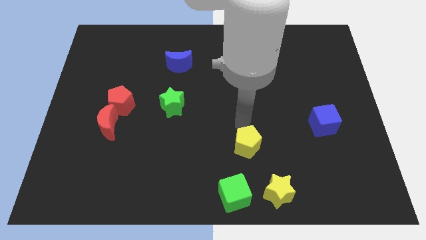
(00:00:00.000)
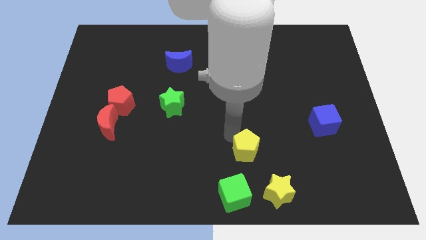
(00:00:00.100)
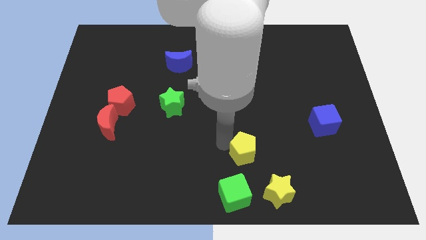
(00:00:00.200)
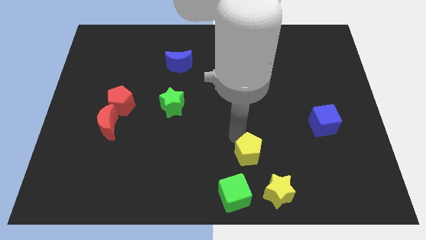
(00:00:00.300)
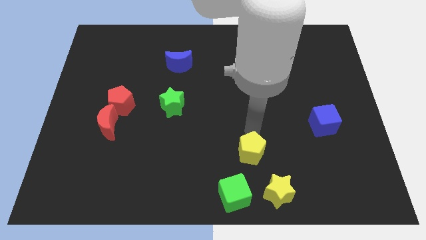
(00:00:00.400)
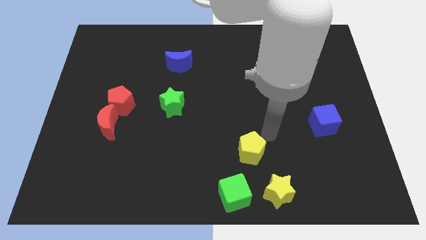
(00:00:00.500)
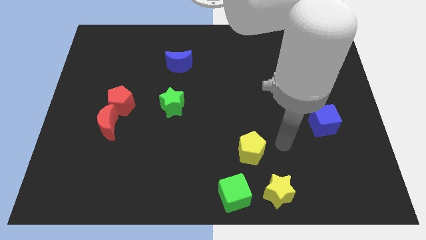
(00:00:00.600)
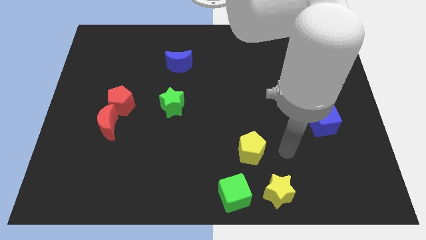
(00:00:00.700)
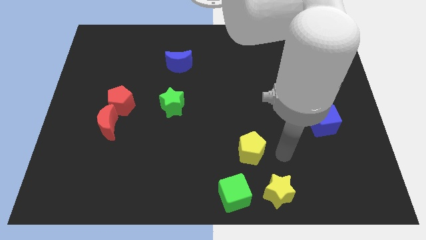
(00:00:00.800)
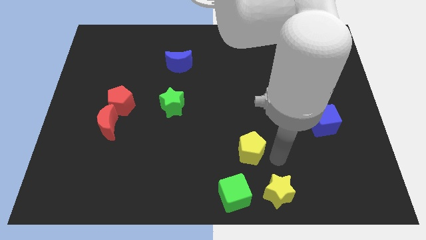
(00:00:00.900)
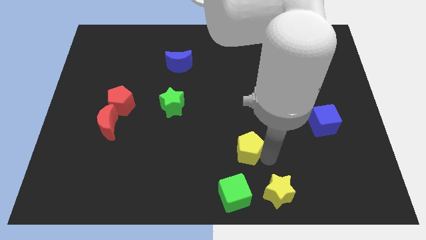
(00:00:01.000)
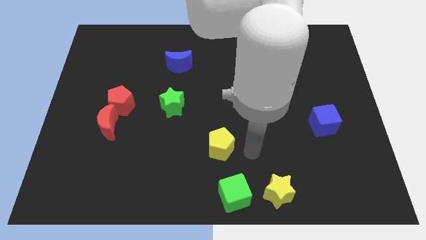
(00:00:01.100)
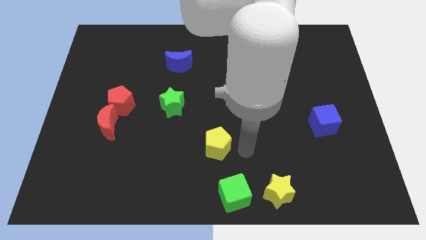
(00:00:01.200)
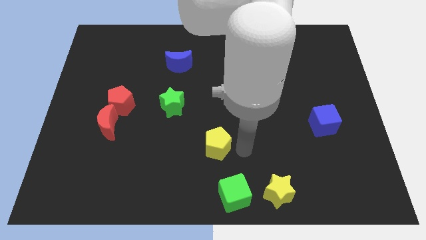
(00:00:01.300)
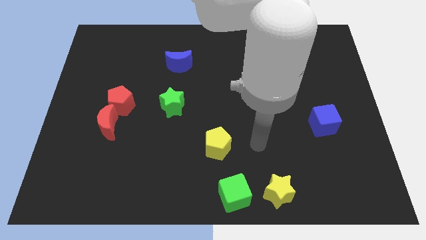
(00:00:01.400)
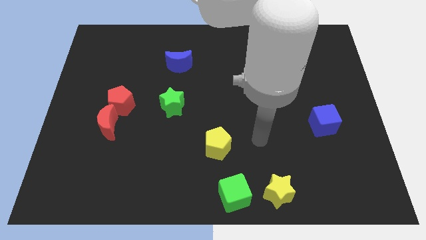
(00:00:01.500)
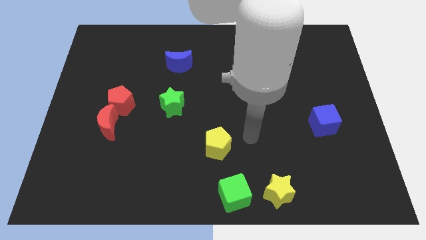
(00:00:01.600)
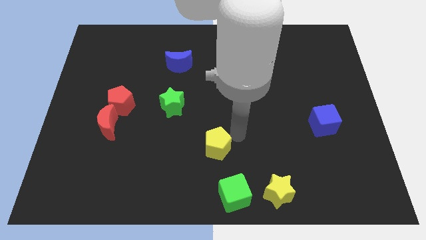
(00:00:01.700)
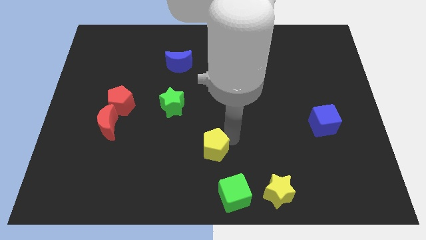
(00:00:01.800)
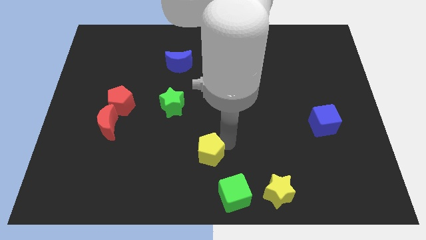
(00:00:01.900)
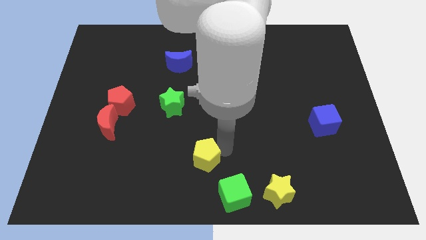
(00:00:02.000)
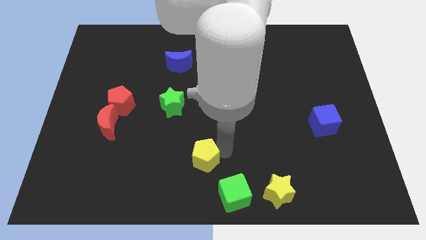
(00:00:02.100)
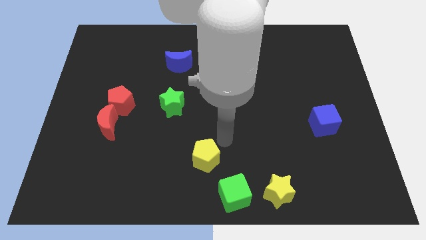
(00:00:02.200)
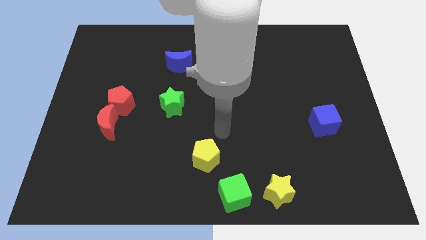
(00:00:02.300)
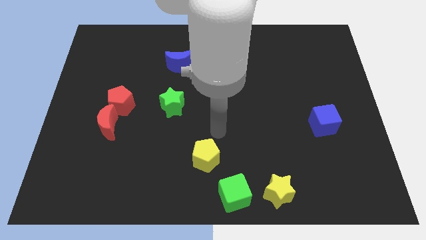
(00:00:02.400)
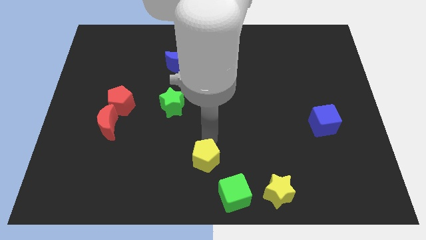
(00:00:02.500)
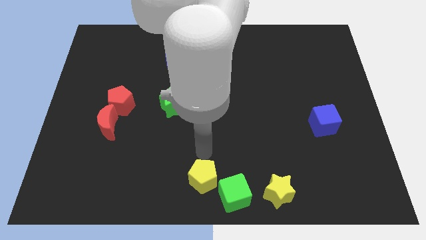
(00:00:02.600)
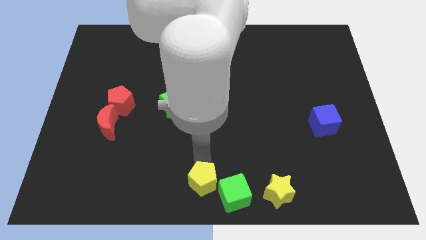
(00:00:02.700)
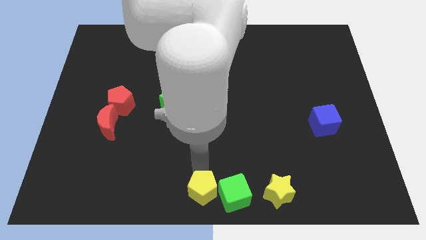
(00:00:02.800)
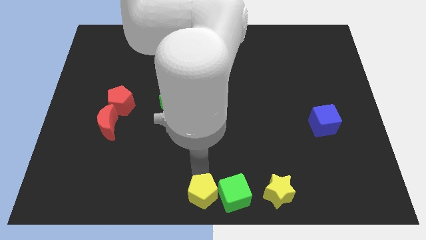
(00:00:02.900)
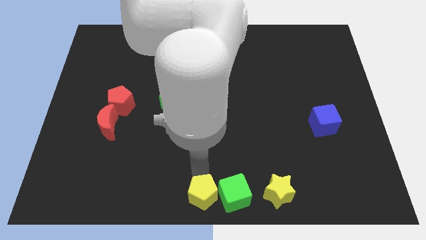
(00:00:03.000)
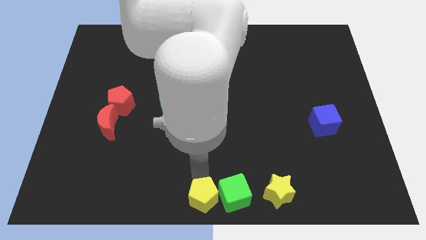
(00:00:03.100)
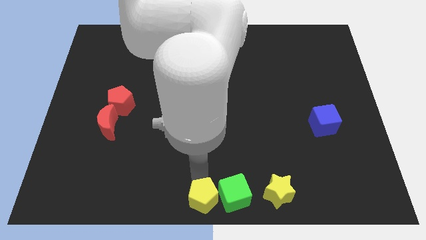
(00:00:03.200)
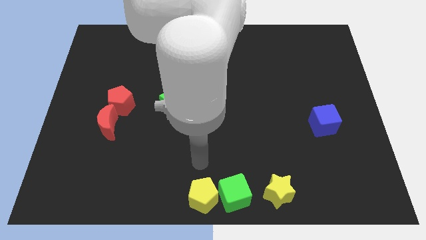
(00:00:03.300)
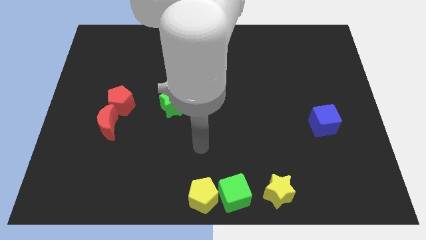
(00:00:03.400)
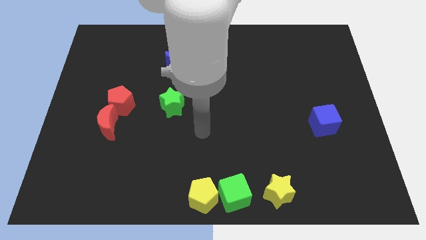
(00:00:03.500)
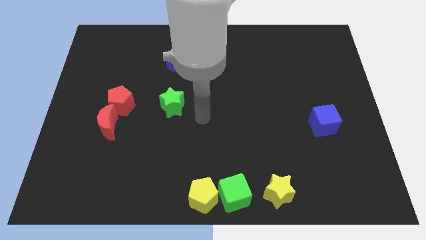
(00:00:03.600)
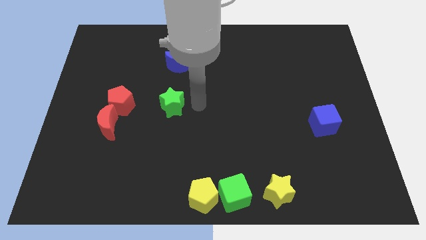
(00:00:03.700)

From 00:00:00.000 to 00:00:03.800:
push the yellow pentagon into the green cube

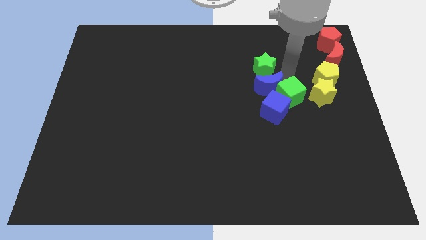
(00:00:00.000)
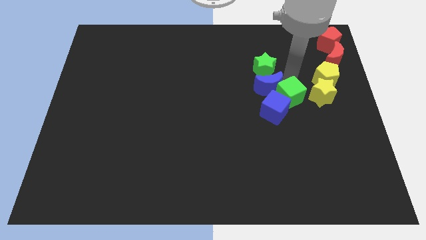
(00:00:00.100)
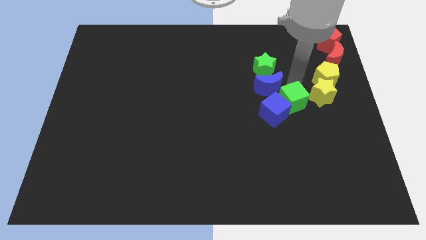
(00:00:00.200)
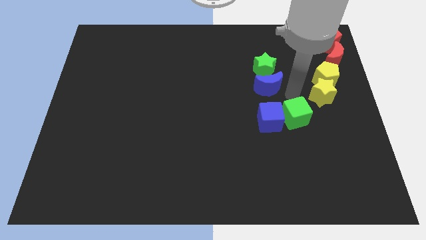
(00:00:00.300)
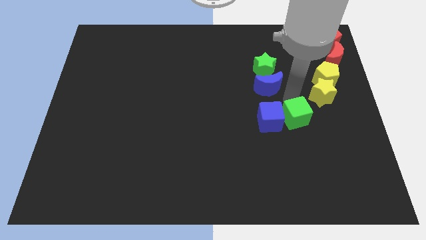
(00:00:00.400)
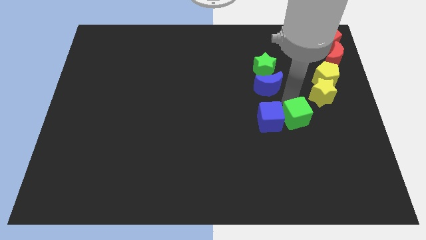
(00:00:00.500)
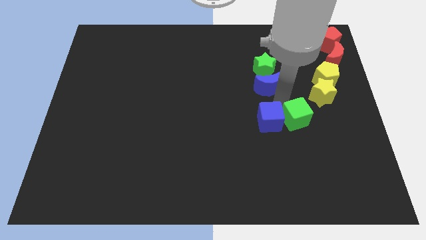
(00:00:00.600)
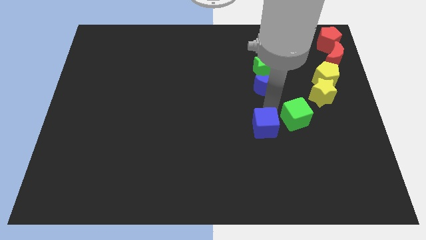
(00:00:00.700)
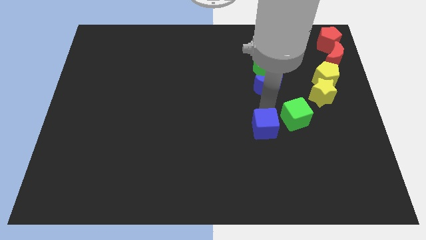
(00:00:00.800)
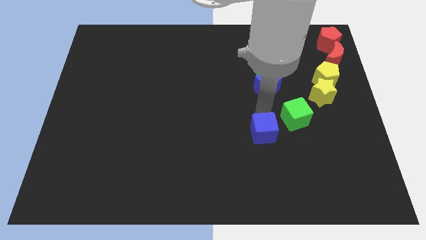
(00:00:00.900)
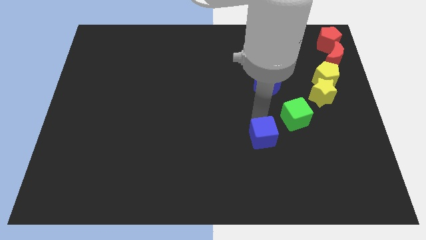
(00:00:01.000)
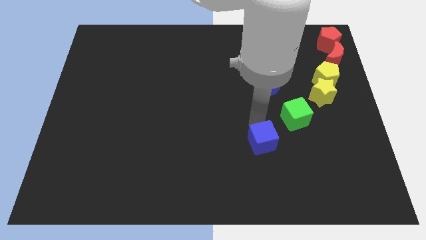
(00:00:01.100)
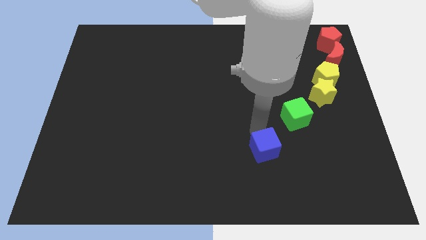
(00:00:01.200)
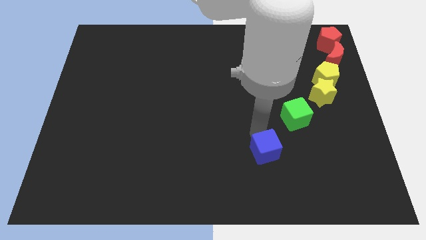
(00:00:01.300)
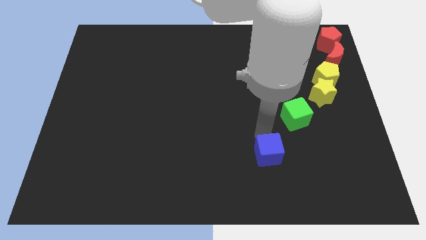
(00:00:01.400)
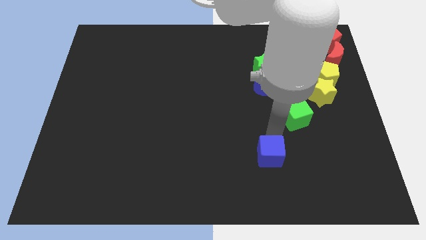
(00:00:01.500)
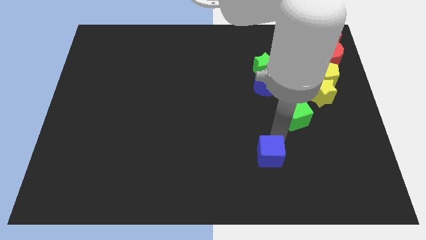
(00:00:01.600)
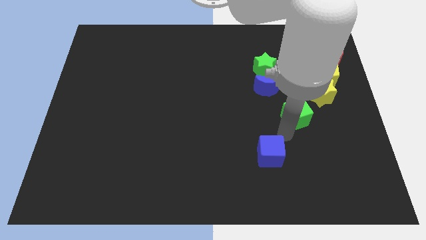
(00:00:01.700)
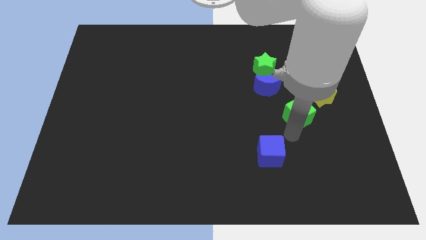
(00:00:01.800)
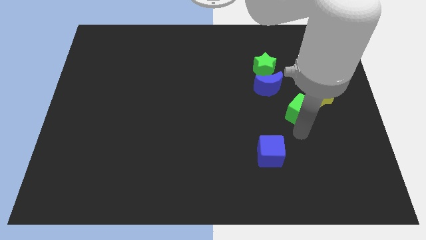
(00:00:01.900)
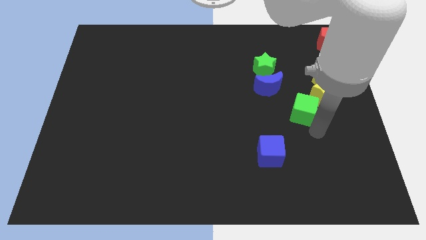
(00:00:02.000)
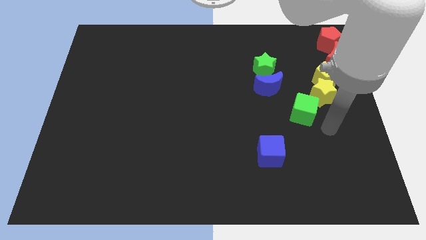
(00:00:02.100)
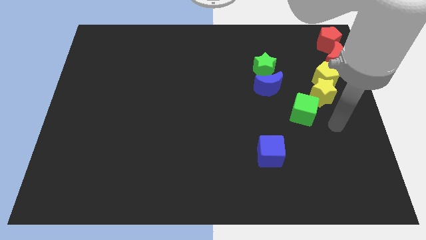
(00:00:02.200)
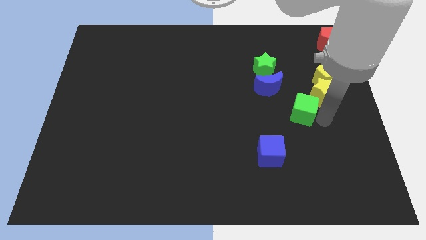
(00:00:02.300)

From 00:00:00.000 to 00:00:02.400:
place the blue cube at the bottom side of the blue crescent

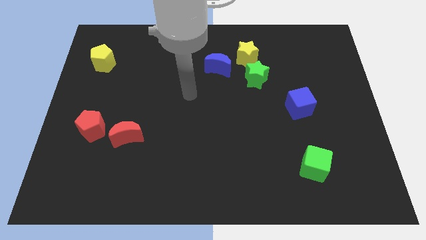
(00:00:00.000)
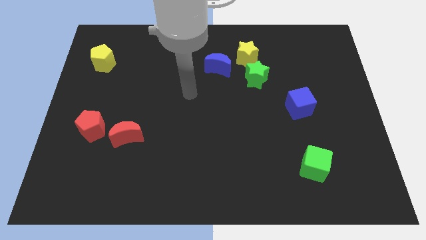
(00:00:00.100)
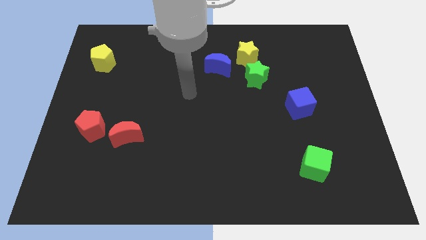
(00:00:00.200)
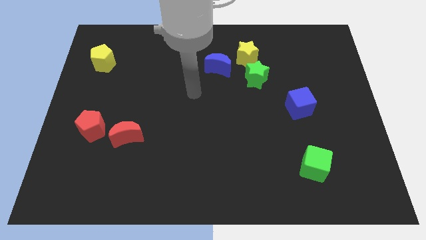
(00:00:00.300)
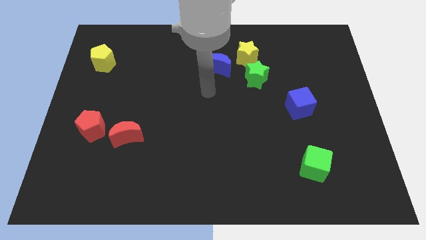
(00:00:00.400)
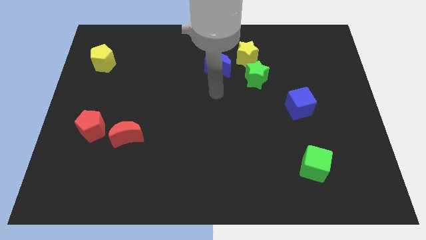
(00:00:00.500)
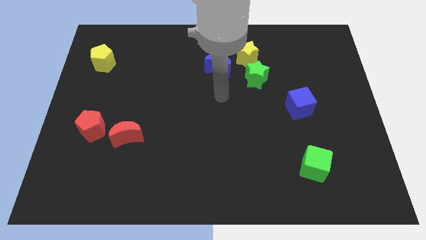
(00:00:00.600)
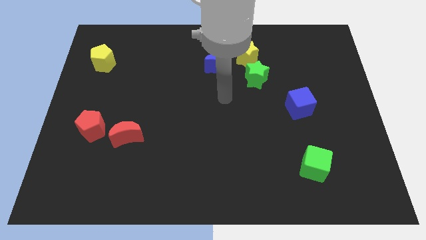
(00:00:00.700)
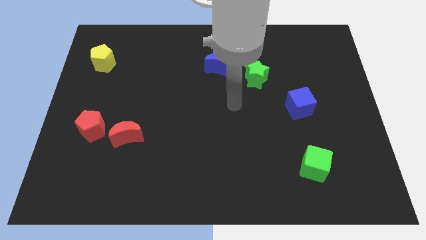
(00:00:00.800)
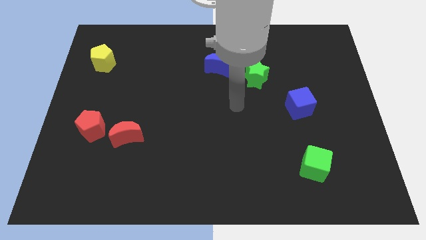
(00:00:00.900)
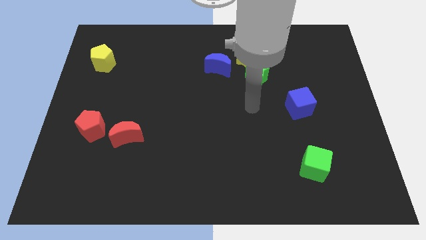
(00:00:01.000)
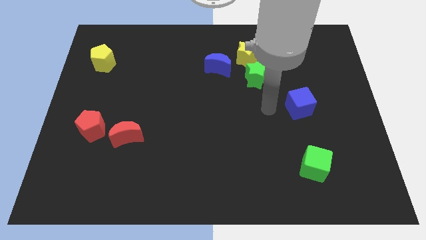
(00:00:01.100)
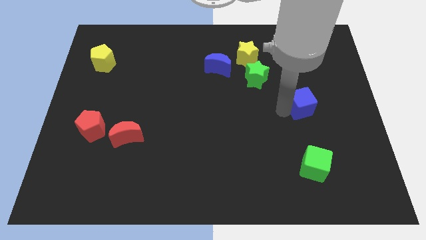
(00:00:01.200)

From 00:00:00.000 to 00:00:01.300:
move your arm towards the blue cube

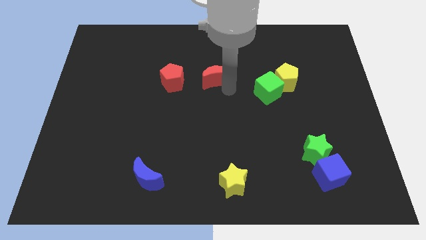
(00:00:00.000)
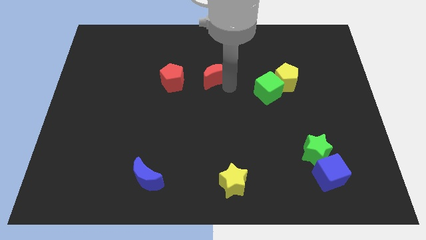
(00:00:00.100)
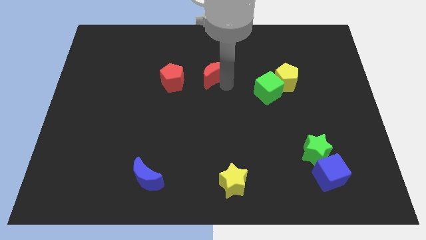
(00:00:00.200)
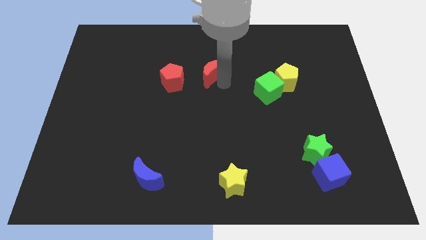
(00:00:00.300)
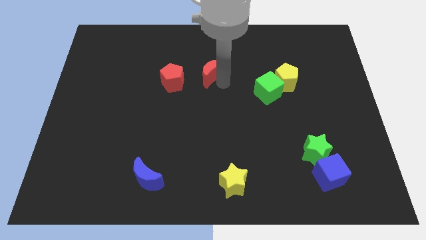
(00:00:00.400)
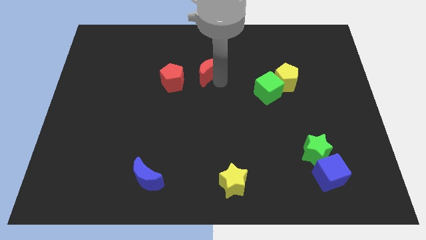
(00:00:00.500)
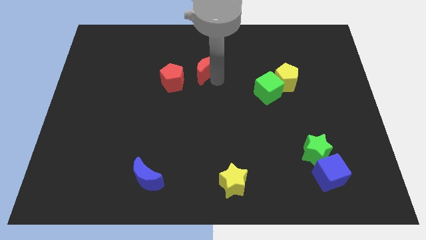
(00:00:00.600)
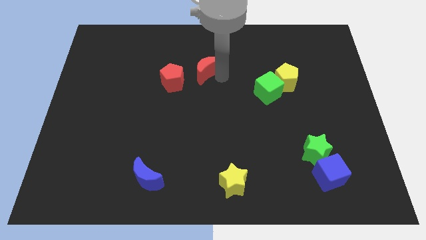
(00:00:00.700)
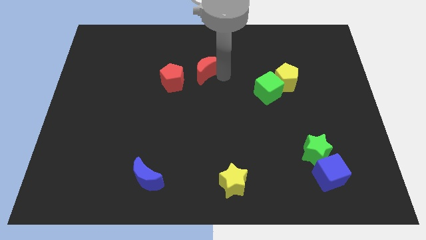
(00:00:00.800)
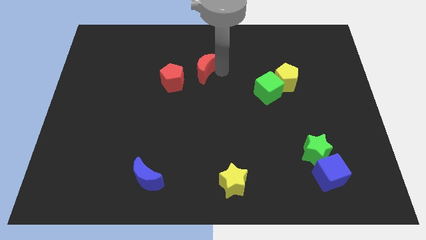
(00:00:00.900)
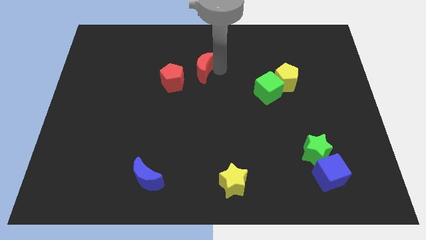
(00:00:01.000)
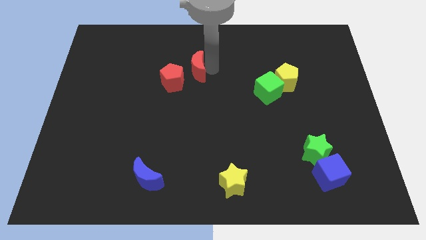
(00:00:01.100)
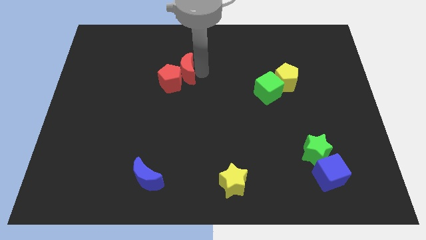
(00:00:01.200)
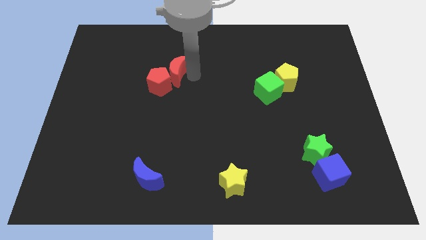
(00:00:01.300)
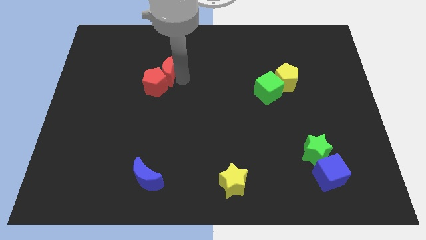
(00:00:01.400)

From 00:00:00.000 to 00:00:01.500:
push the red crescent into red pentagon
